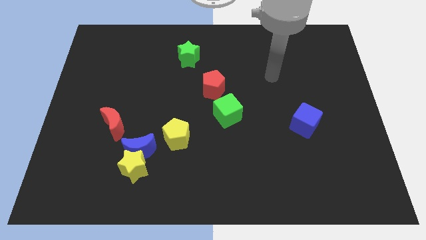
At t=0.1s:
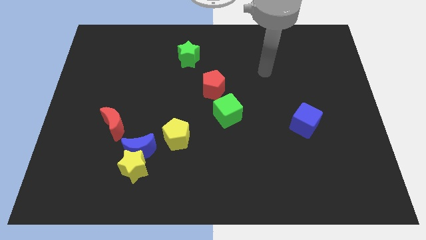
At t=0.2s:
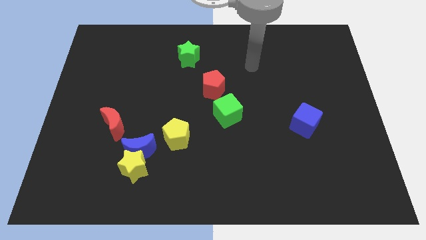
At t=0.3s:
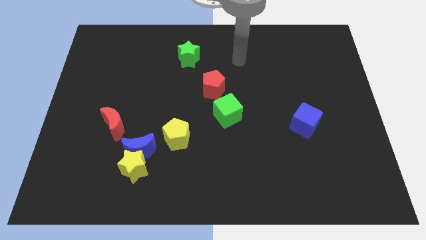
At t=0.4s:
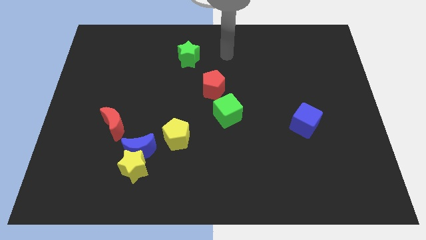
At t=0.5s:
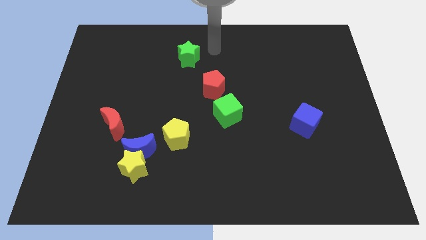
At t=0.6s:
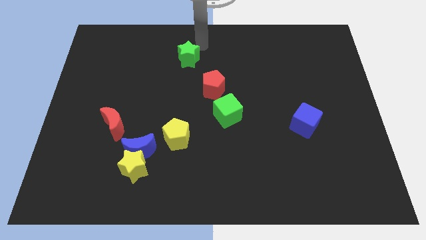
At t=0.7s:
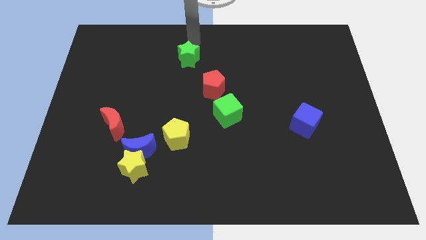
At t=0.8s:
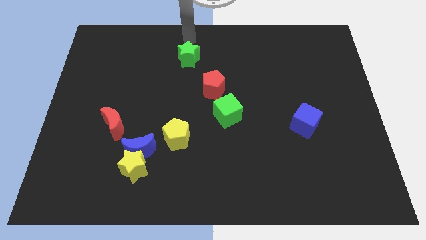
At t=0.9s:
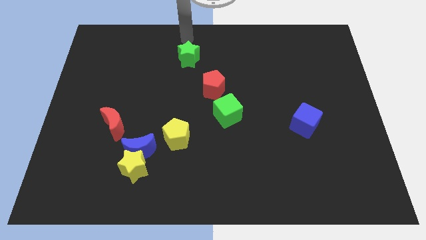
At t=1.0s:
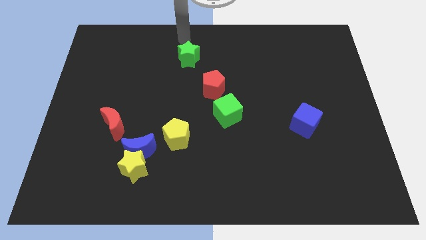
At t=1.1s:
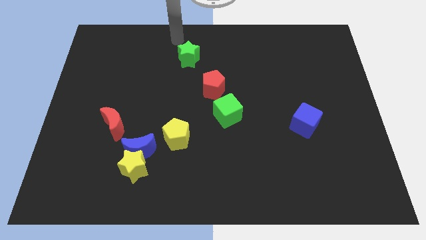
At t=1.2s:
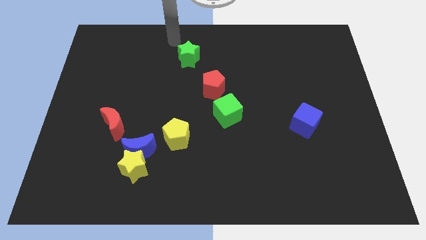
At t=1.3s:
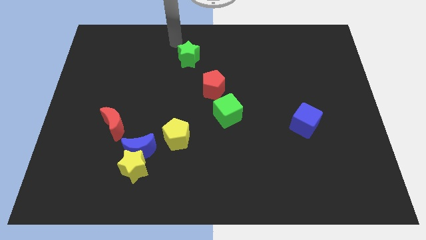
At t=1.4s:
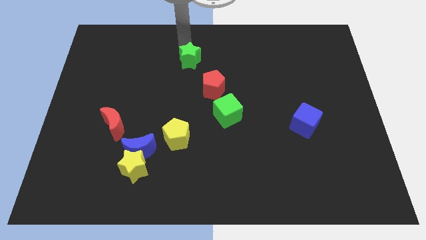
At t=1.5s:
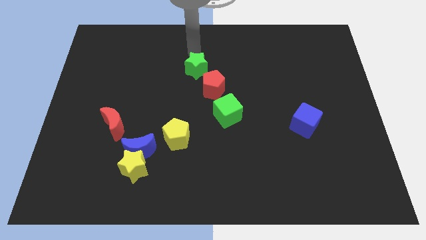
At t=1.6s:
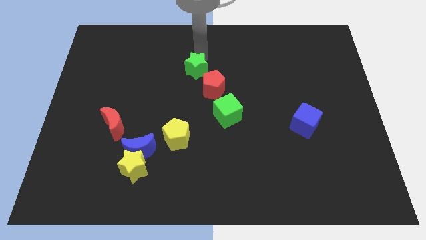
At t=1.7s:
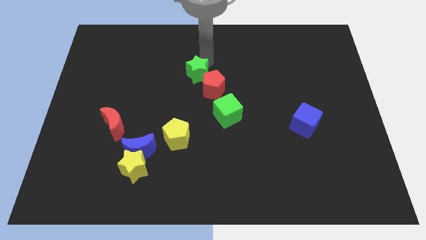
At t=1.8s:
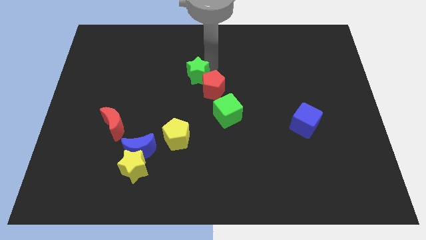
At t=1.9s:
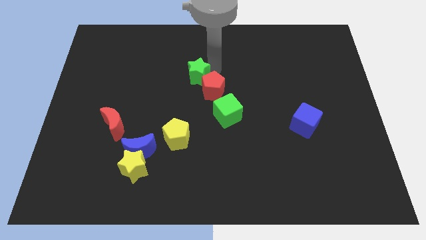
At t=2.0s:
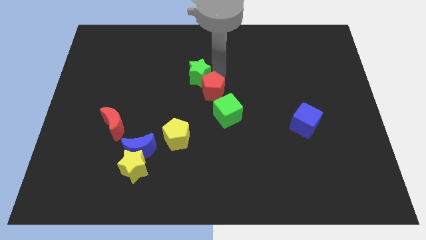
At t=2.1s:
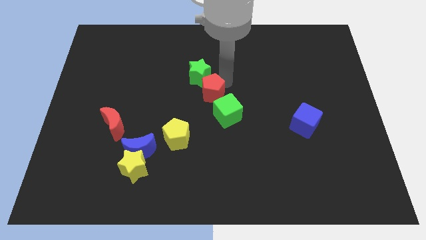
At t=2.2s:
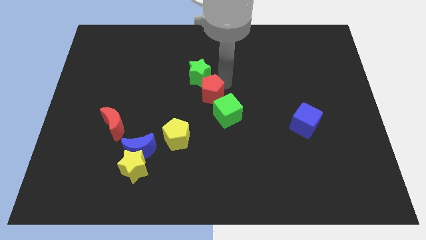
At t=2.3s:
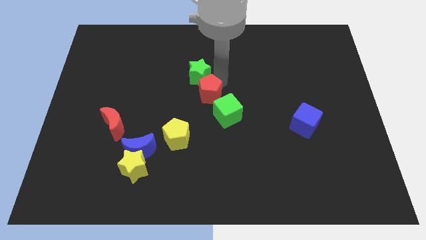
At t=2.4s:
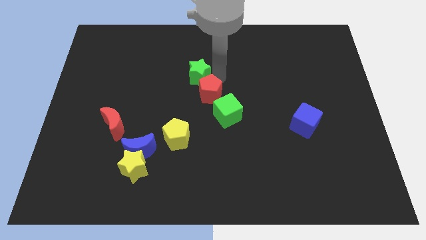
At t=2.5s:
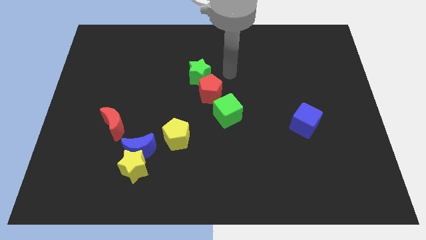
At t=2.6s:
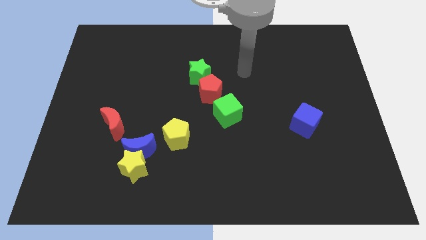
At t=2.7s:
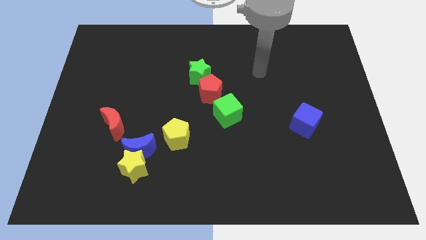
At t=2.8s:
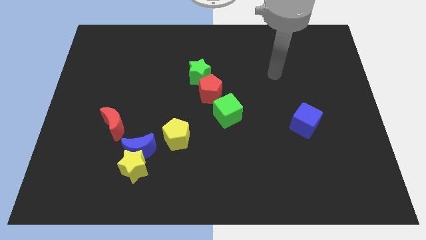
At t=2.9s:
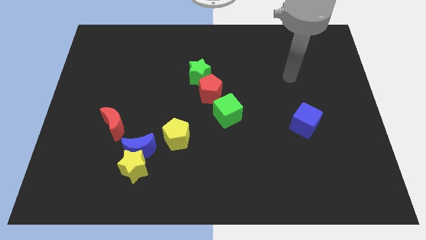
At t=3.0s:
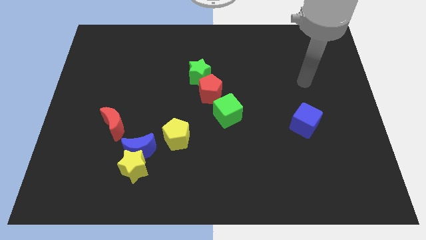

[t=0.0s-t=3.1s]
place green star to the top of red pentagon

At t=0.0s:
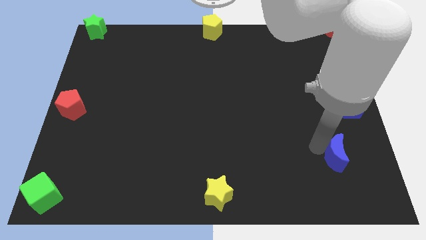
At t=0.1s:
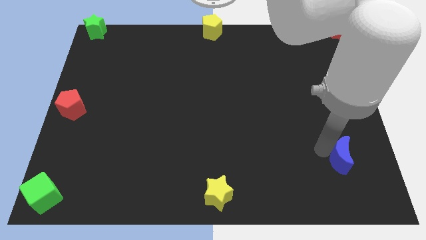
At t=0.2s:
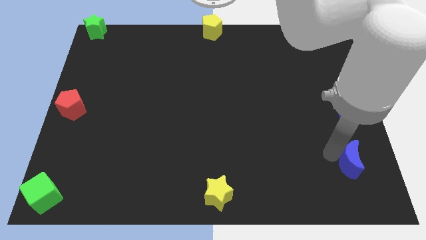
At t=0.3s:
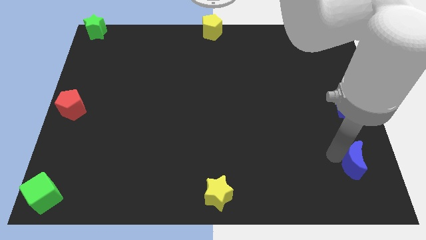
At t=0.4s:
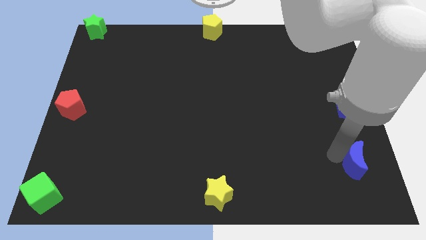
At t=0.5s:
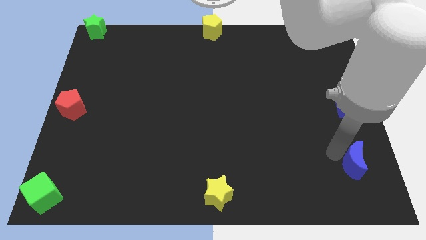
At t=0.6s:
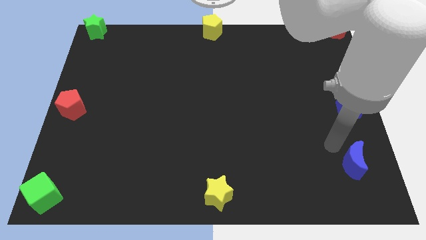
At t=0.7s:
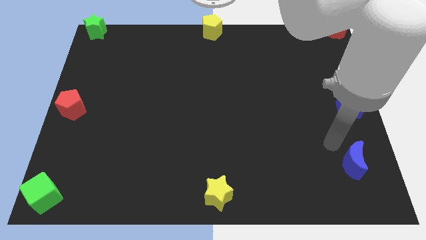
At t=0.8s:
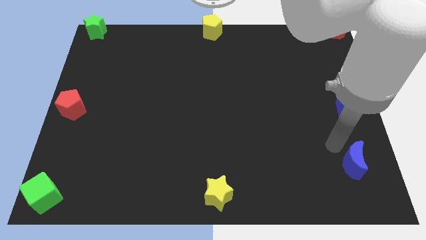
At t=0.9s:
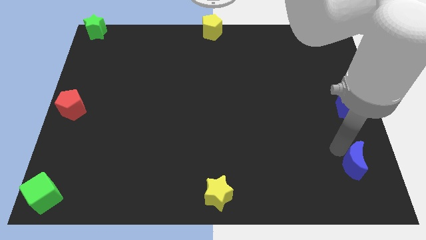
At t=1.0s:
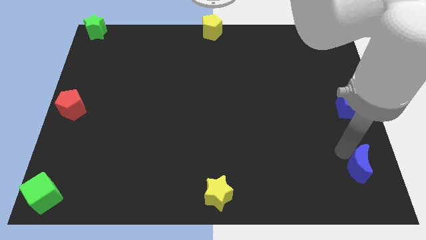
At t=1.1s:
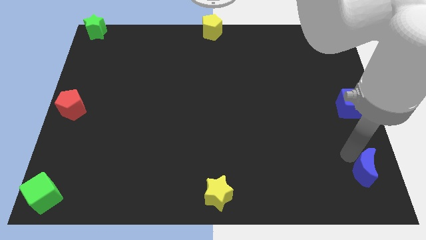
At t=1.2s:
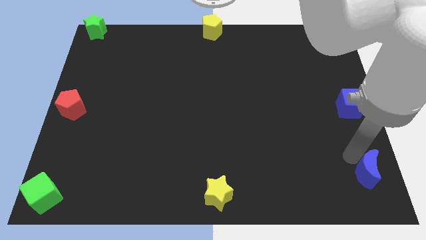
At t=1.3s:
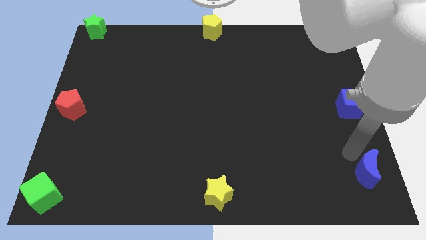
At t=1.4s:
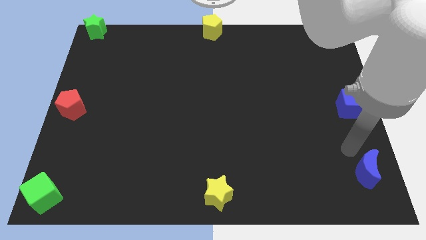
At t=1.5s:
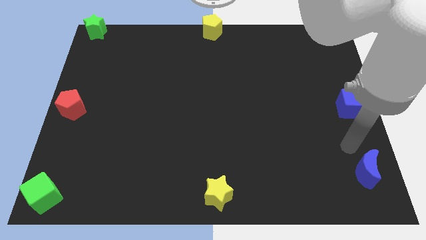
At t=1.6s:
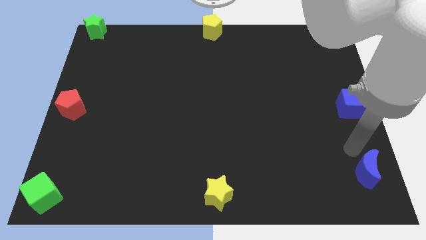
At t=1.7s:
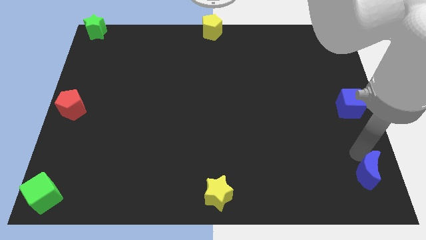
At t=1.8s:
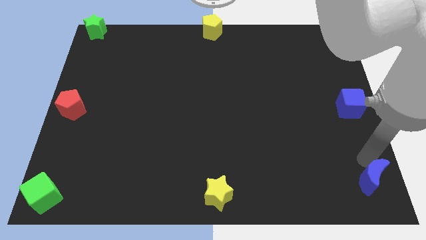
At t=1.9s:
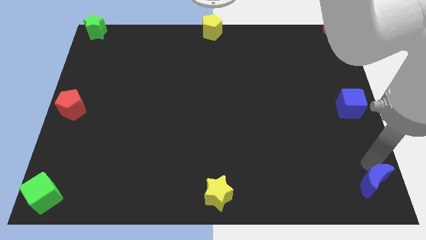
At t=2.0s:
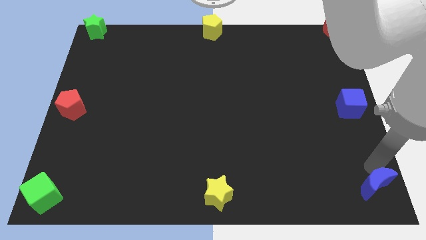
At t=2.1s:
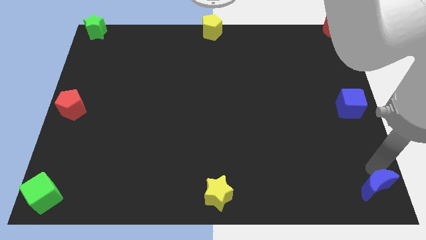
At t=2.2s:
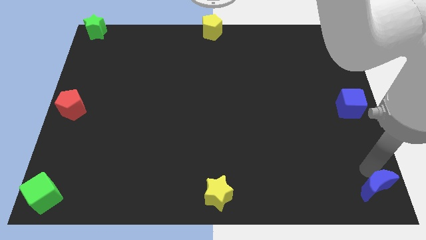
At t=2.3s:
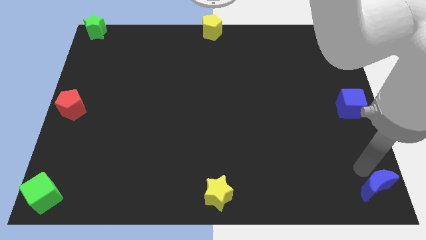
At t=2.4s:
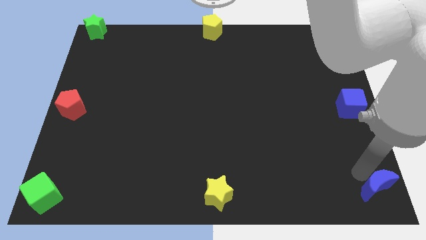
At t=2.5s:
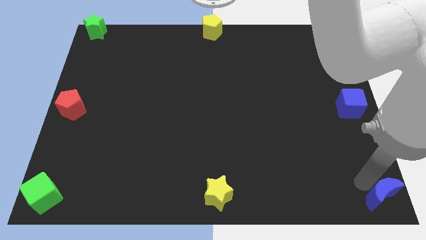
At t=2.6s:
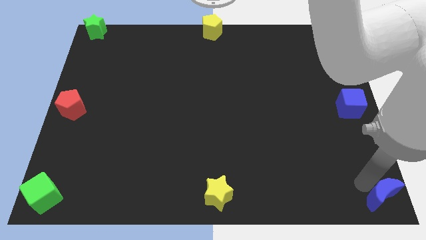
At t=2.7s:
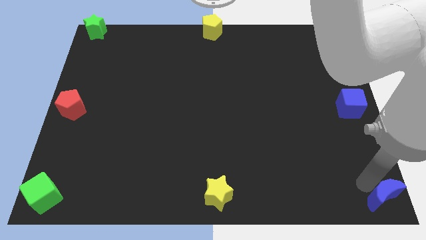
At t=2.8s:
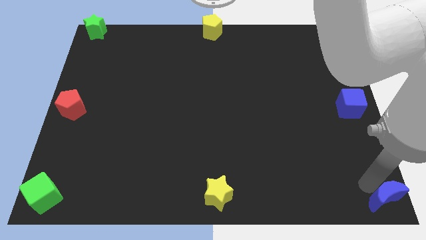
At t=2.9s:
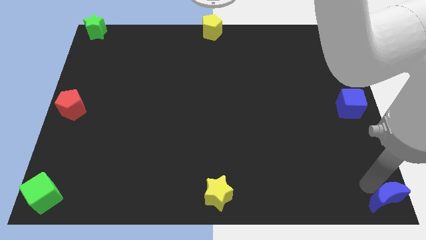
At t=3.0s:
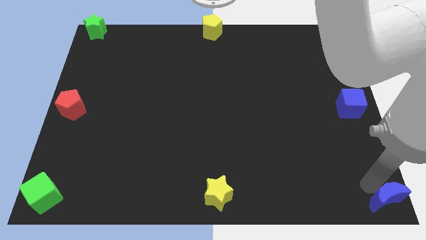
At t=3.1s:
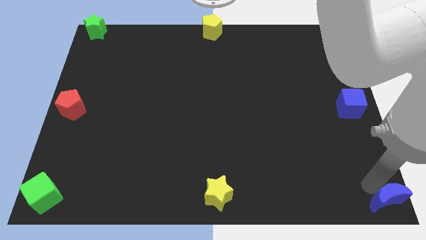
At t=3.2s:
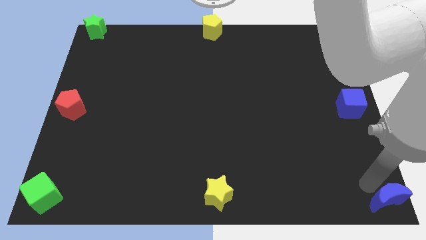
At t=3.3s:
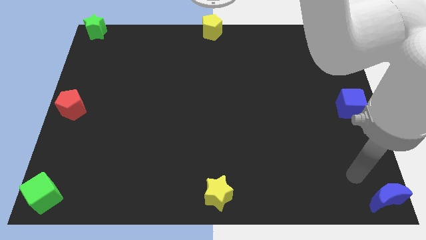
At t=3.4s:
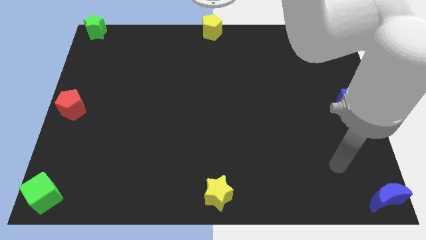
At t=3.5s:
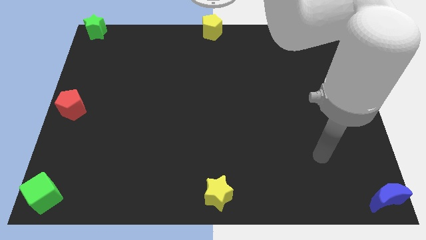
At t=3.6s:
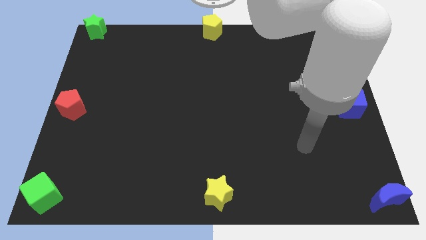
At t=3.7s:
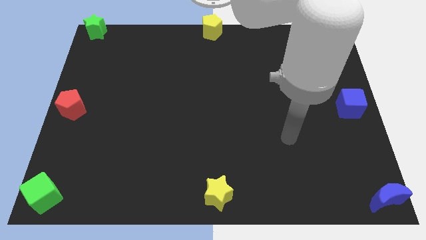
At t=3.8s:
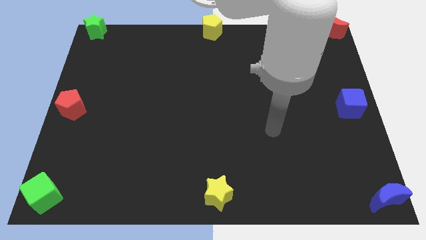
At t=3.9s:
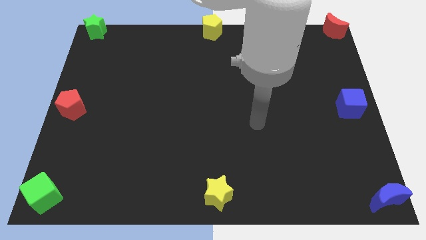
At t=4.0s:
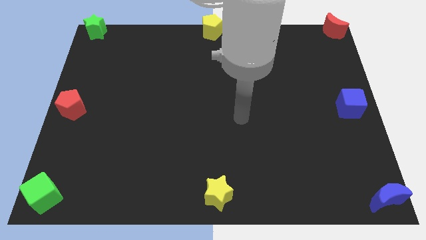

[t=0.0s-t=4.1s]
push blue crescent towards bottom right corner

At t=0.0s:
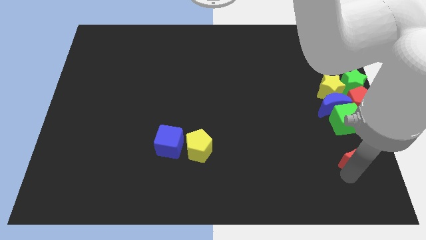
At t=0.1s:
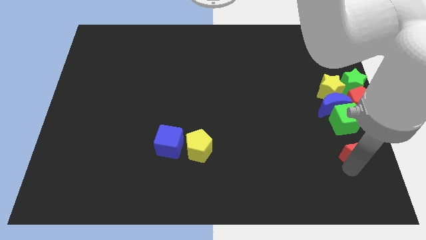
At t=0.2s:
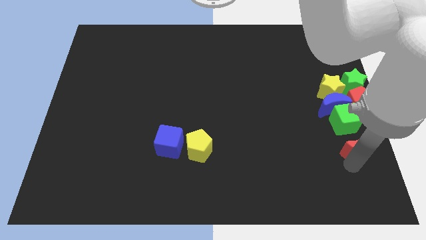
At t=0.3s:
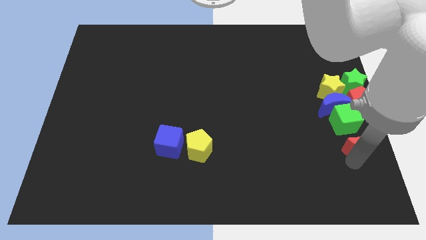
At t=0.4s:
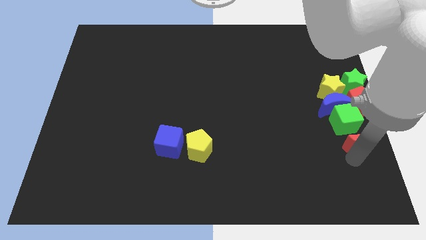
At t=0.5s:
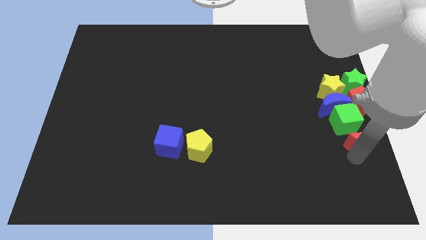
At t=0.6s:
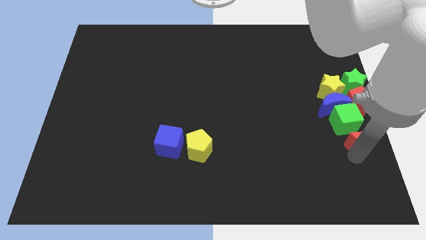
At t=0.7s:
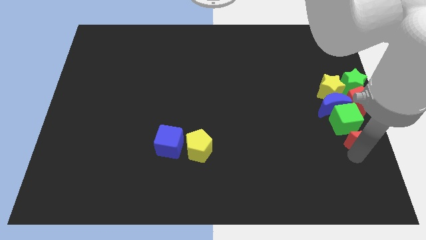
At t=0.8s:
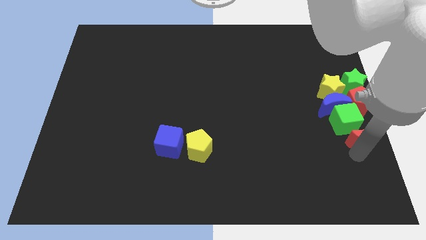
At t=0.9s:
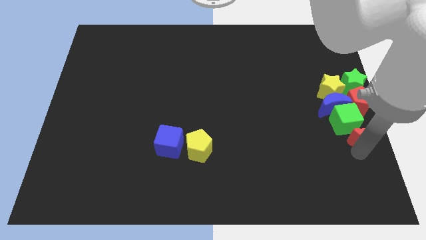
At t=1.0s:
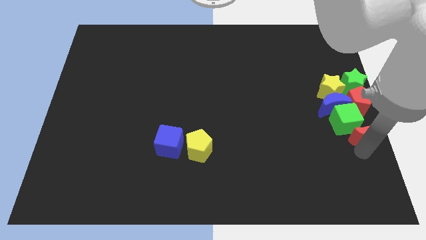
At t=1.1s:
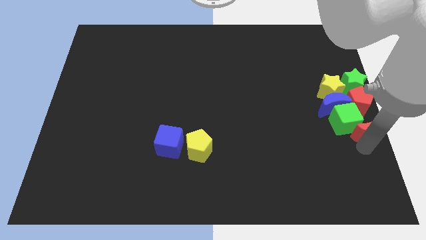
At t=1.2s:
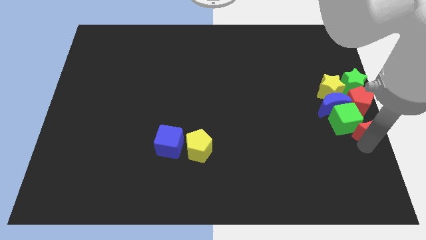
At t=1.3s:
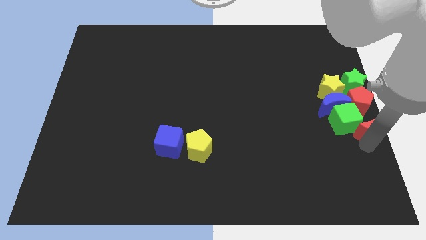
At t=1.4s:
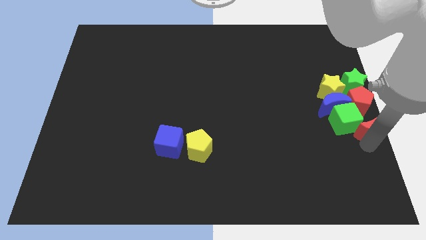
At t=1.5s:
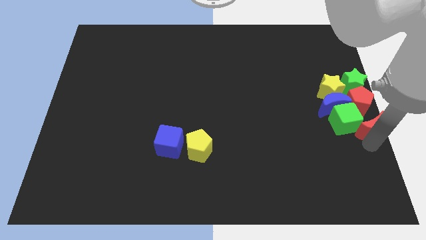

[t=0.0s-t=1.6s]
move red moon to the right bottom of the green cube
